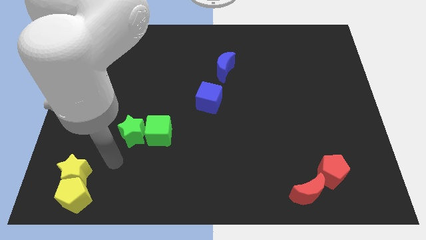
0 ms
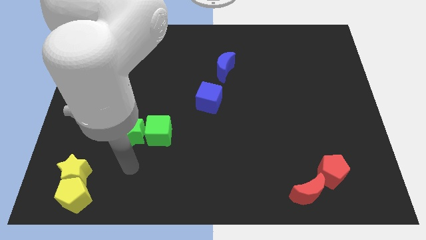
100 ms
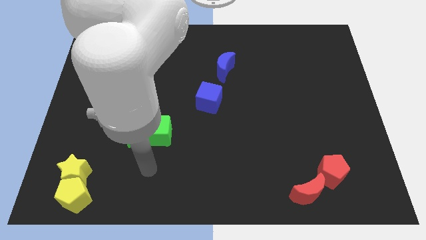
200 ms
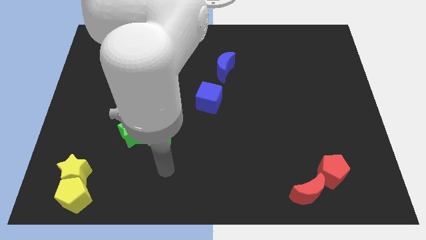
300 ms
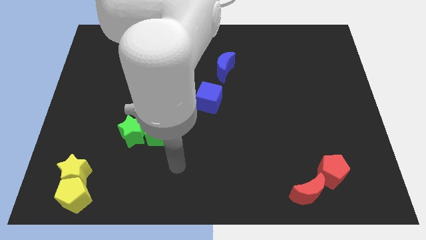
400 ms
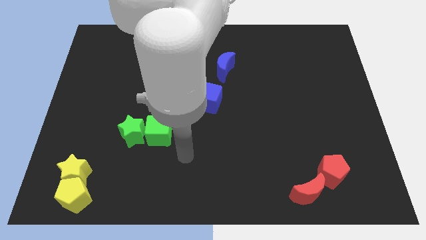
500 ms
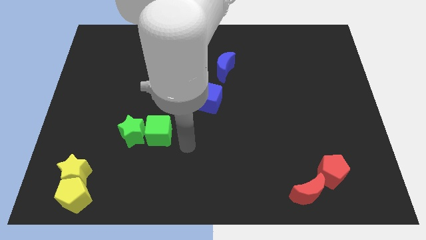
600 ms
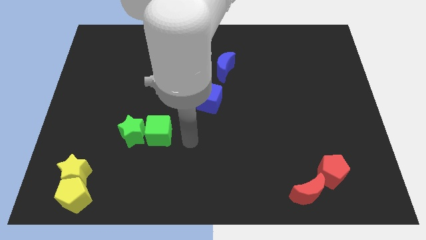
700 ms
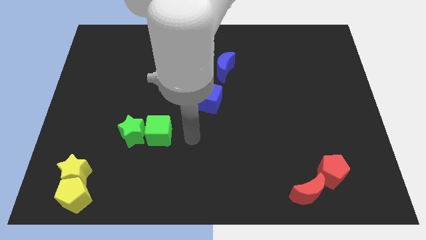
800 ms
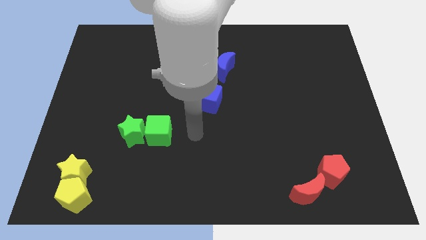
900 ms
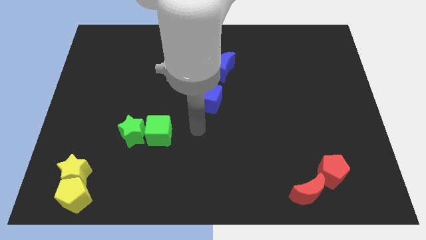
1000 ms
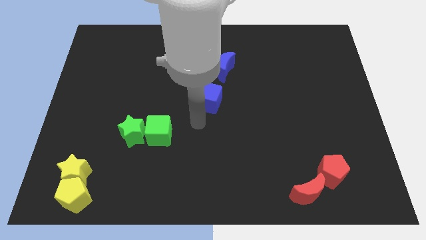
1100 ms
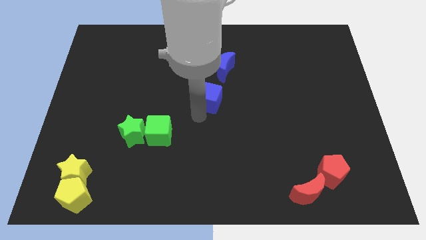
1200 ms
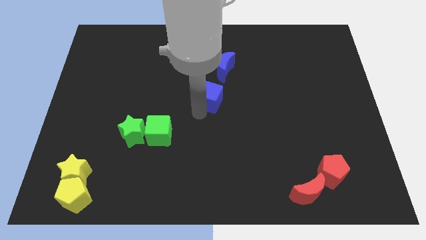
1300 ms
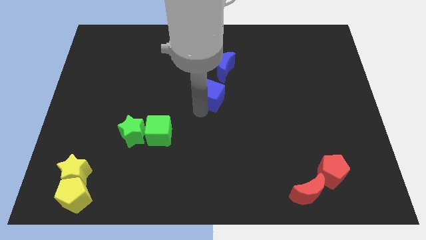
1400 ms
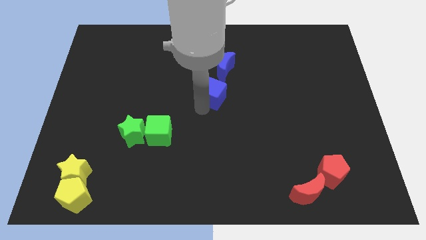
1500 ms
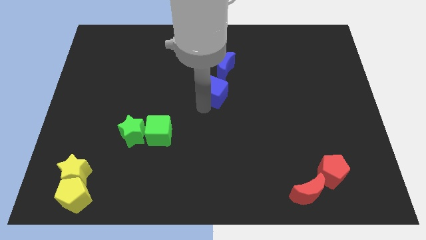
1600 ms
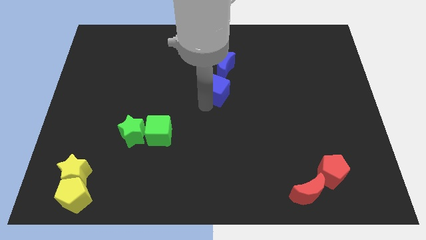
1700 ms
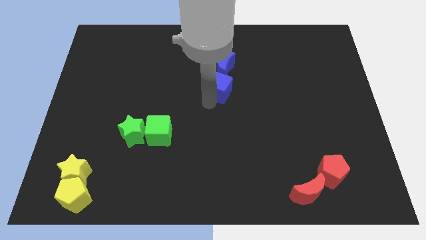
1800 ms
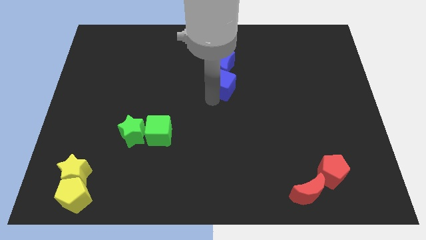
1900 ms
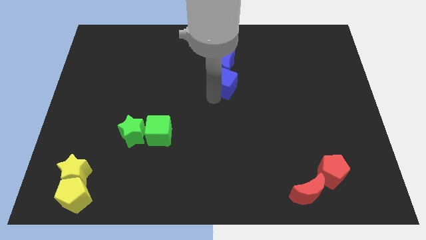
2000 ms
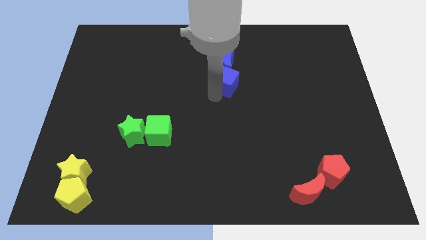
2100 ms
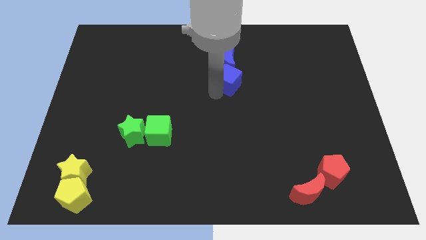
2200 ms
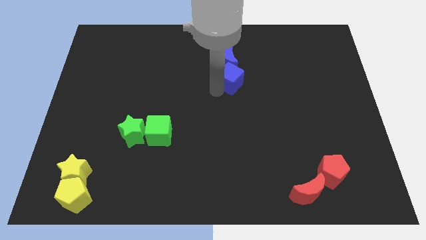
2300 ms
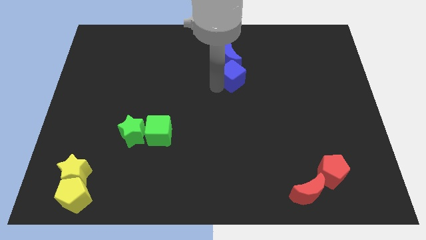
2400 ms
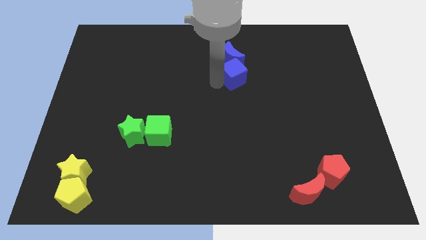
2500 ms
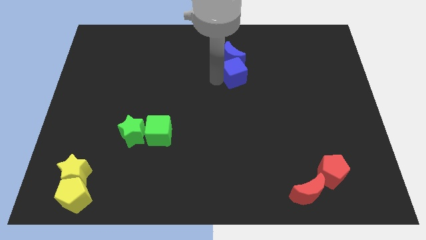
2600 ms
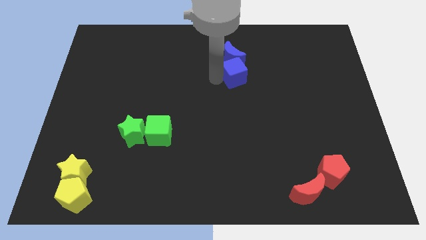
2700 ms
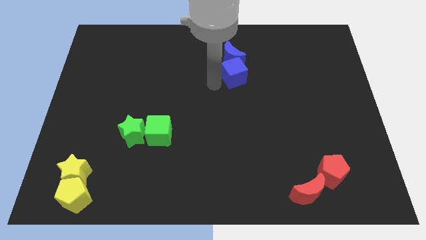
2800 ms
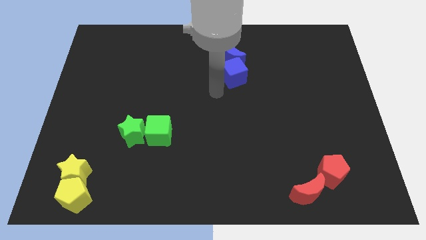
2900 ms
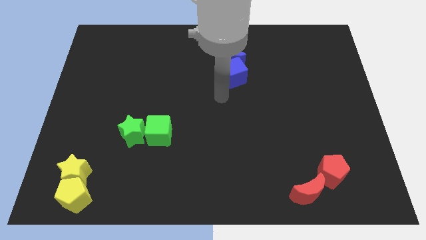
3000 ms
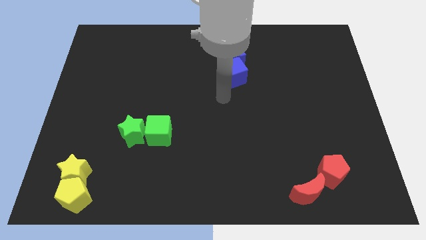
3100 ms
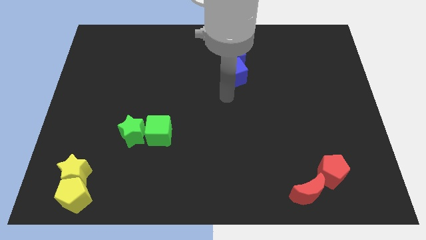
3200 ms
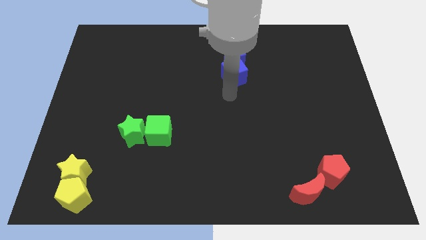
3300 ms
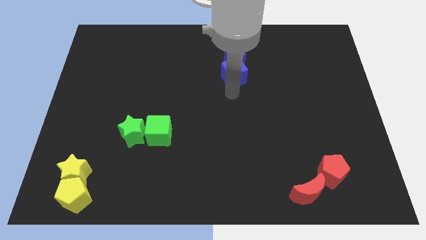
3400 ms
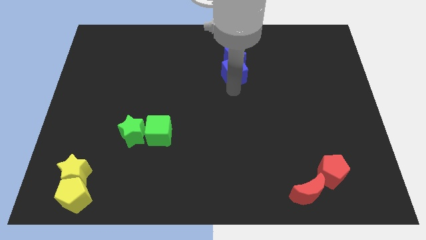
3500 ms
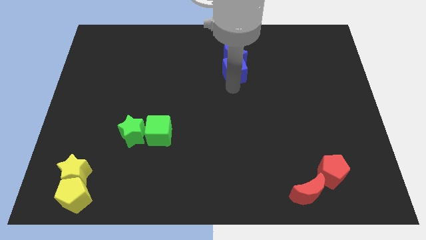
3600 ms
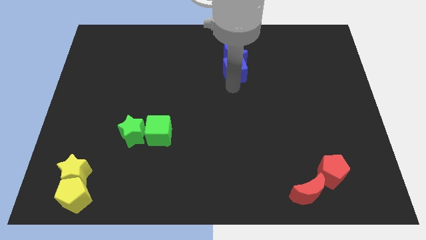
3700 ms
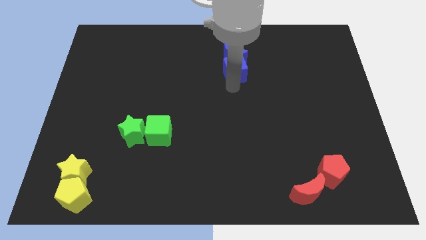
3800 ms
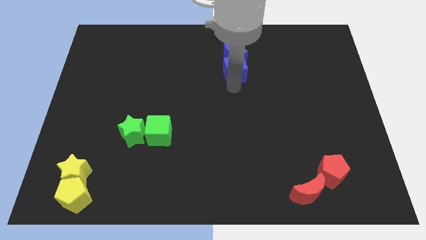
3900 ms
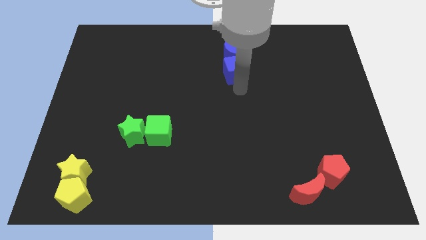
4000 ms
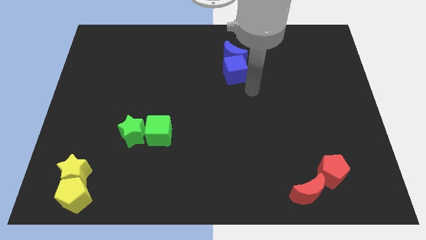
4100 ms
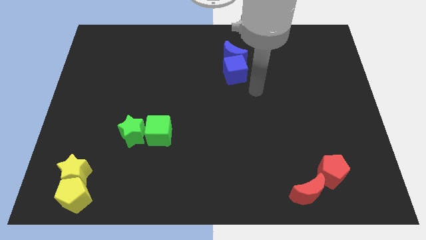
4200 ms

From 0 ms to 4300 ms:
put the blue cube and blue crescent together

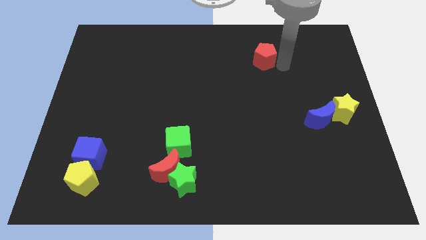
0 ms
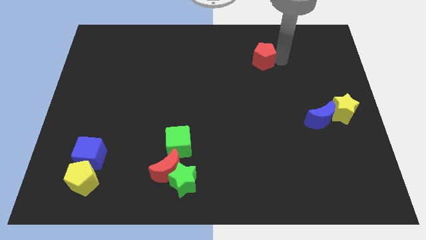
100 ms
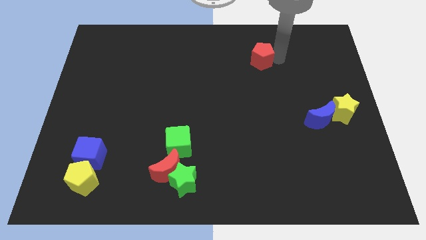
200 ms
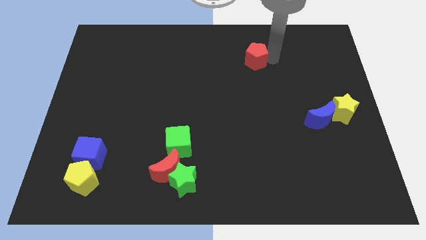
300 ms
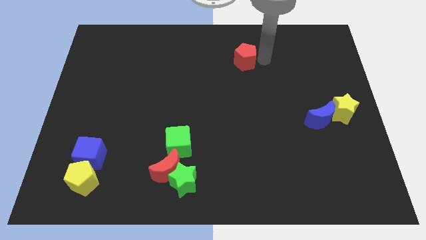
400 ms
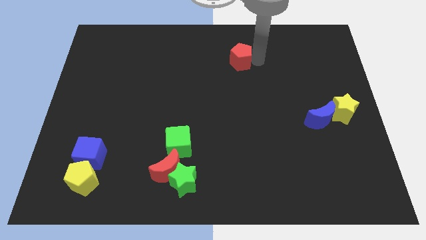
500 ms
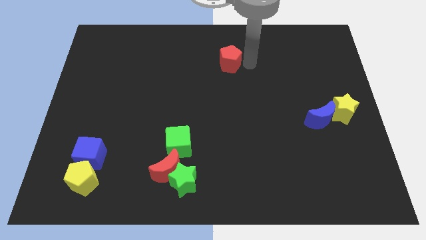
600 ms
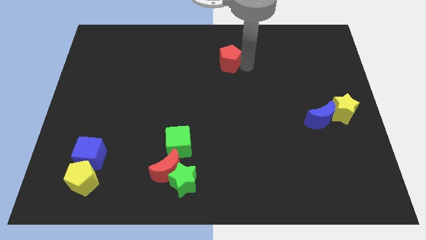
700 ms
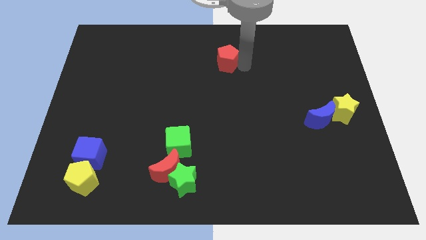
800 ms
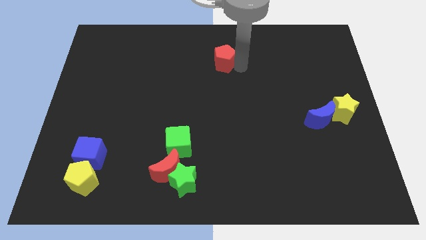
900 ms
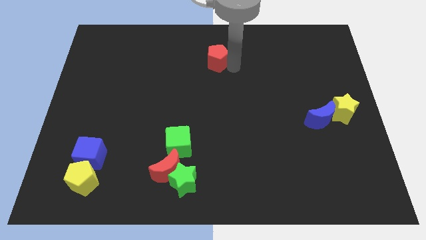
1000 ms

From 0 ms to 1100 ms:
move red pentagon towards left

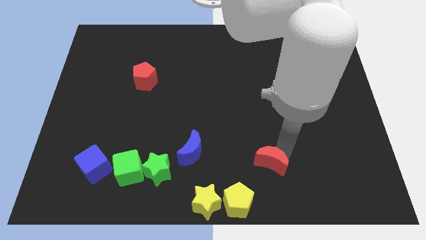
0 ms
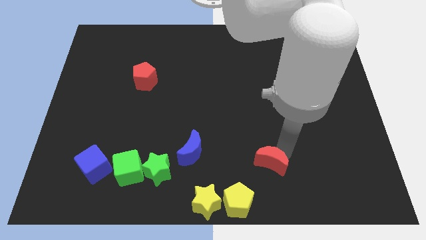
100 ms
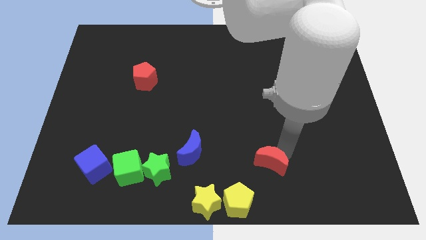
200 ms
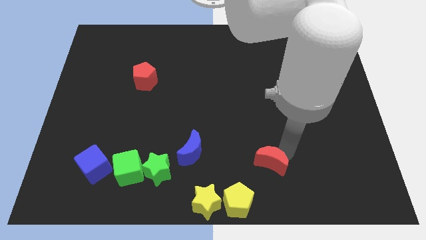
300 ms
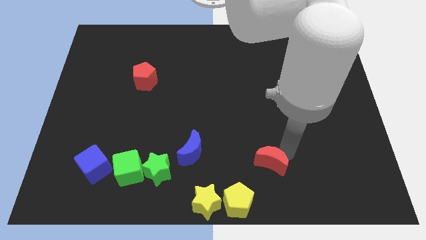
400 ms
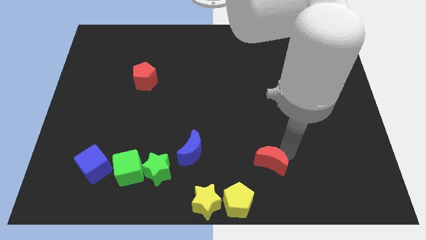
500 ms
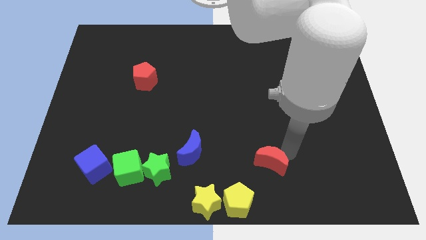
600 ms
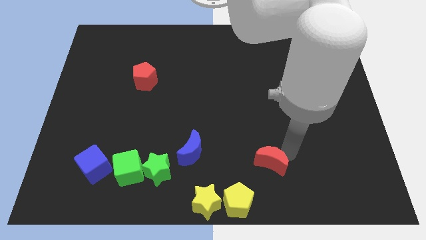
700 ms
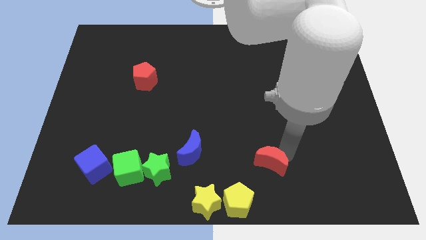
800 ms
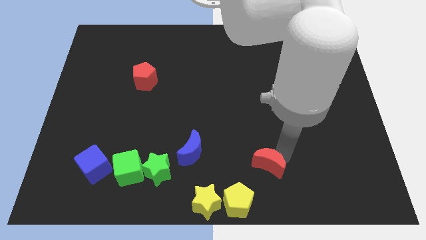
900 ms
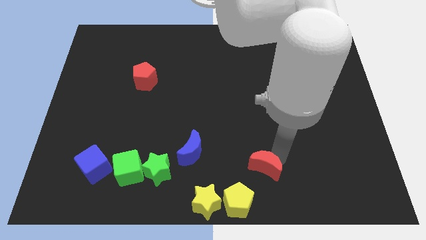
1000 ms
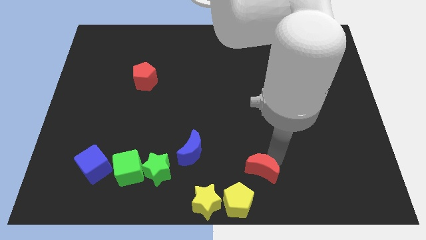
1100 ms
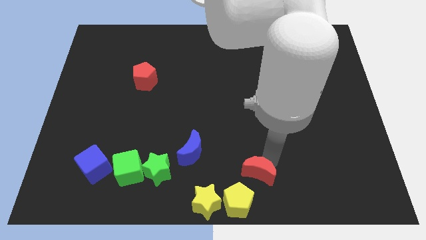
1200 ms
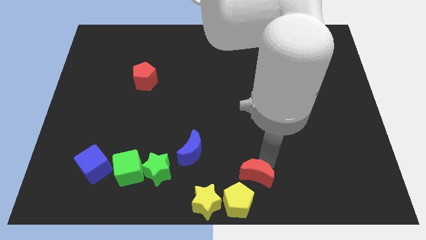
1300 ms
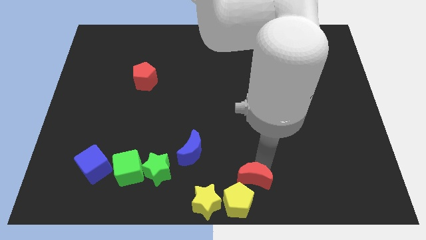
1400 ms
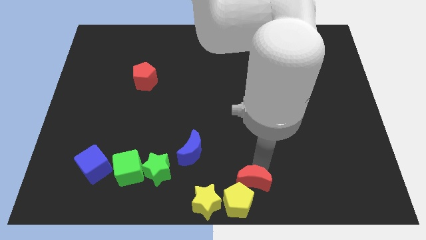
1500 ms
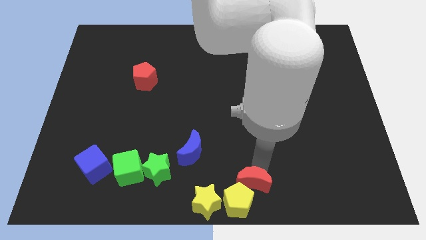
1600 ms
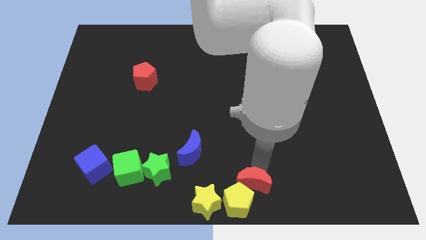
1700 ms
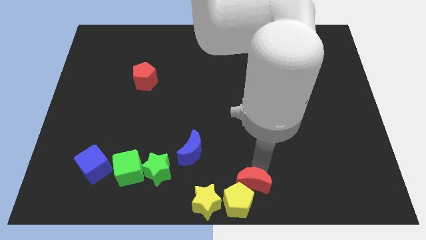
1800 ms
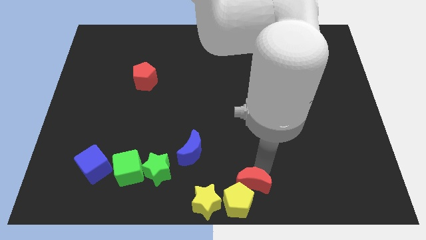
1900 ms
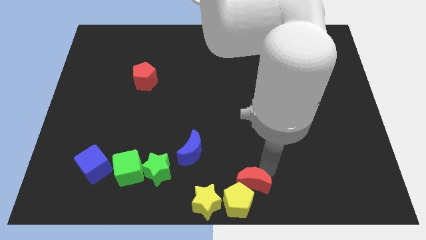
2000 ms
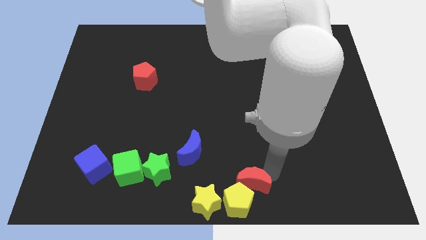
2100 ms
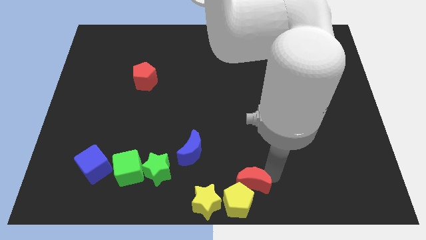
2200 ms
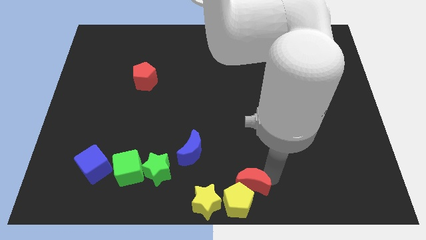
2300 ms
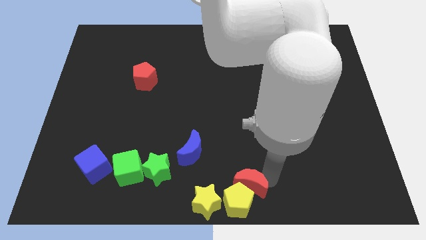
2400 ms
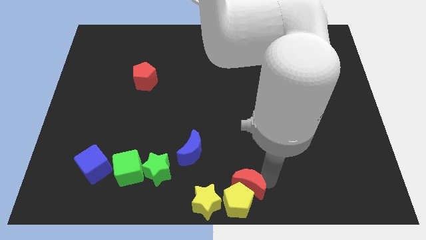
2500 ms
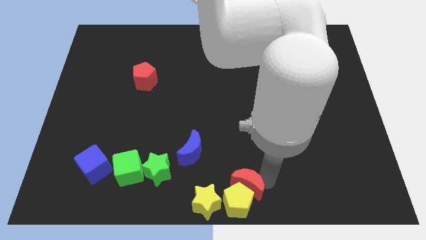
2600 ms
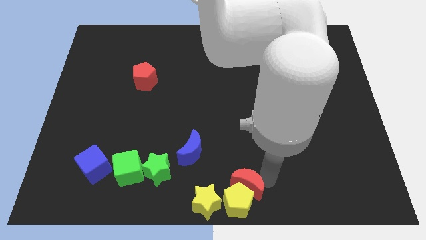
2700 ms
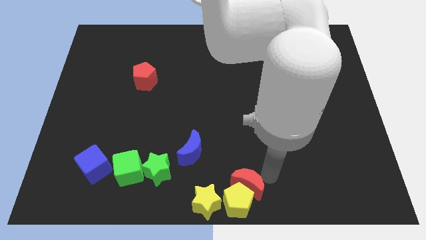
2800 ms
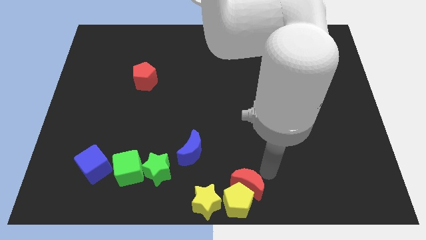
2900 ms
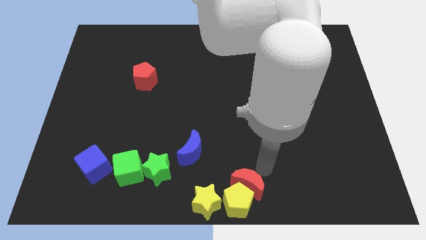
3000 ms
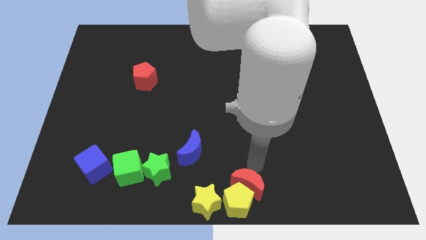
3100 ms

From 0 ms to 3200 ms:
drag the red moon to top right of yellow pentagon

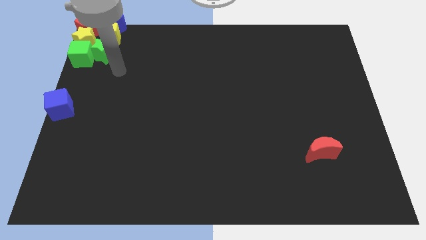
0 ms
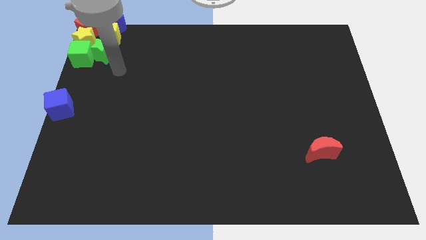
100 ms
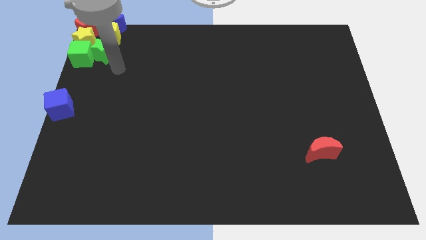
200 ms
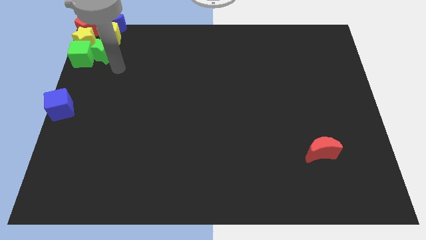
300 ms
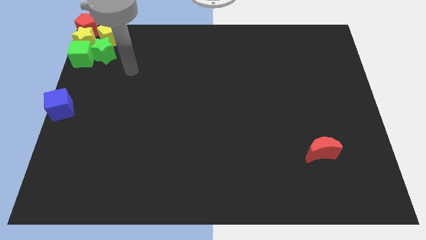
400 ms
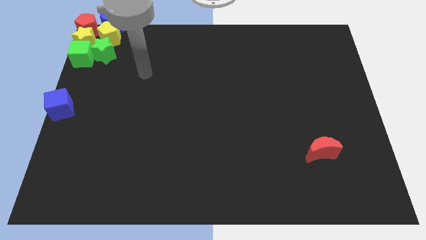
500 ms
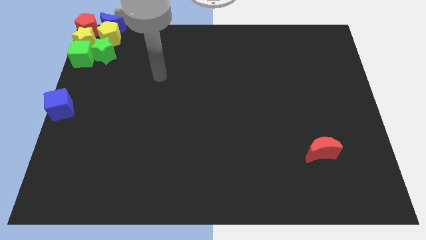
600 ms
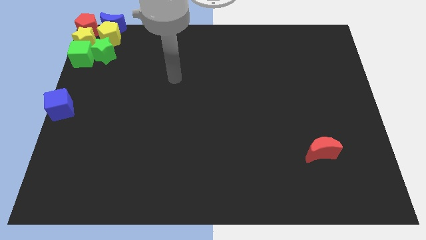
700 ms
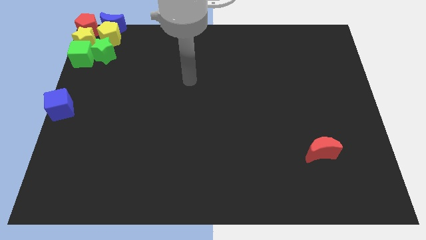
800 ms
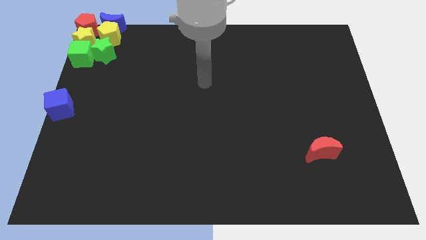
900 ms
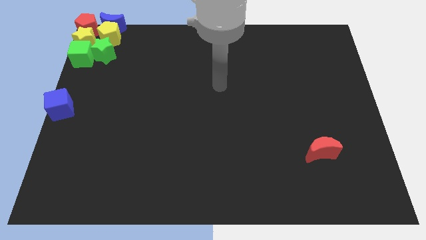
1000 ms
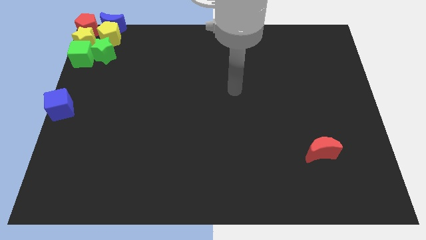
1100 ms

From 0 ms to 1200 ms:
place the green star at the top right center
